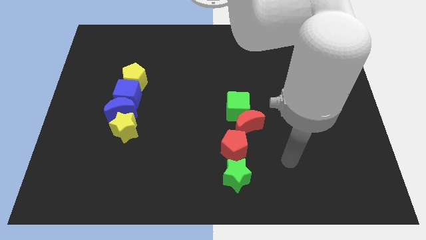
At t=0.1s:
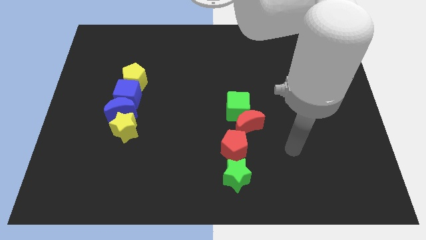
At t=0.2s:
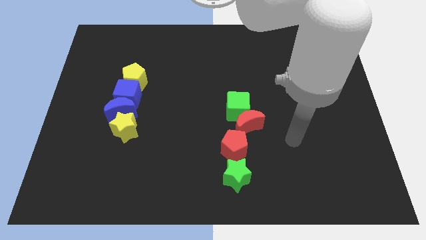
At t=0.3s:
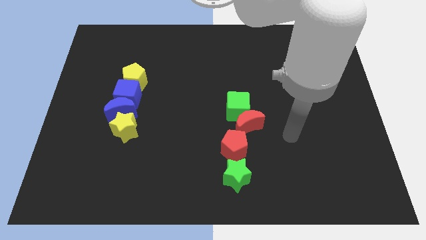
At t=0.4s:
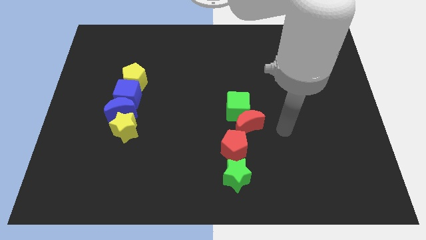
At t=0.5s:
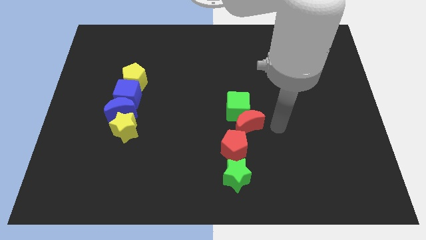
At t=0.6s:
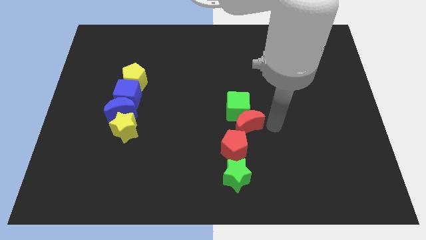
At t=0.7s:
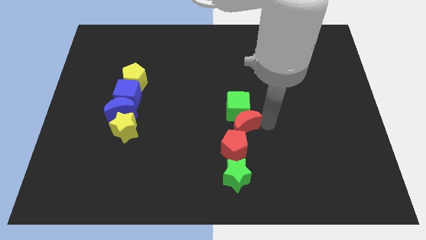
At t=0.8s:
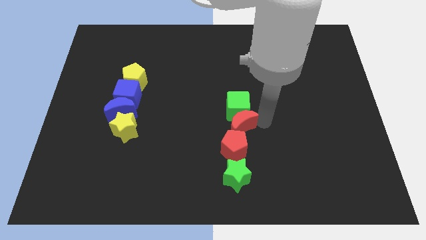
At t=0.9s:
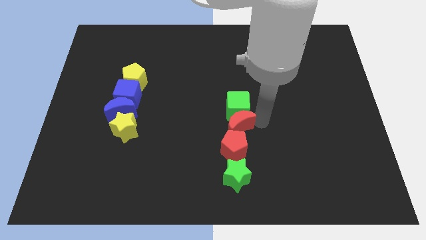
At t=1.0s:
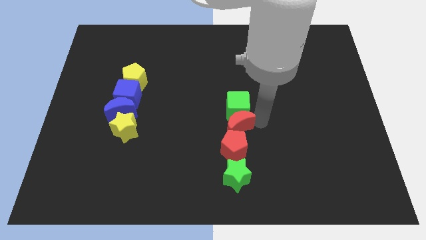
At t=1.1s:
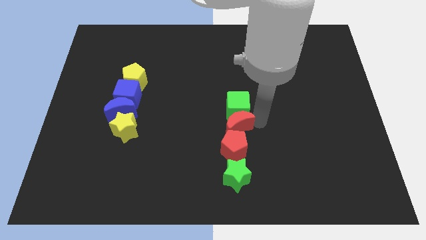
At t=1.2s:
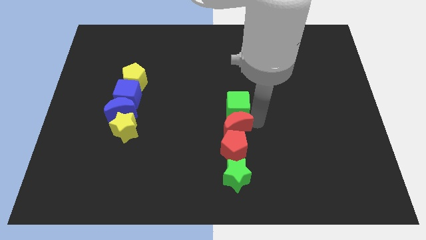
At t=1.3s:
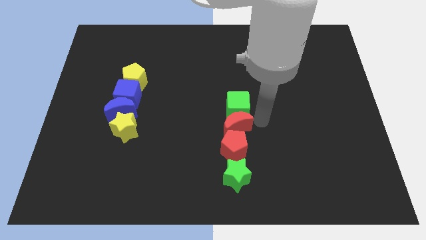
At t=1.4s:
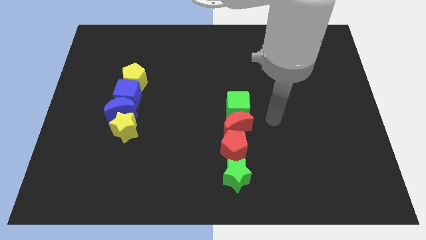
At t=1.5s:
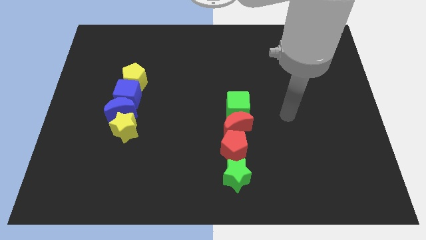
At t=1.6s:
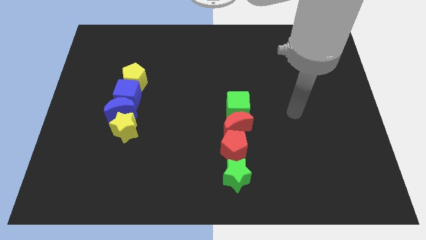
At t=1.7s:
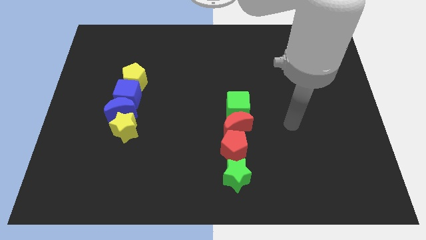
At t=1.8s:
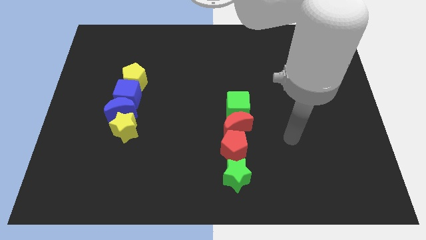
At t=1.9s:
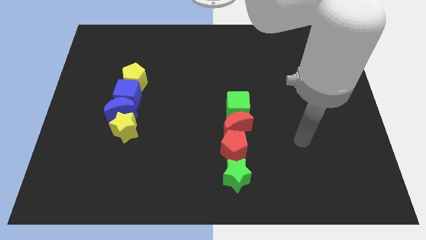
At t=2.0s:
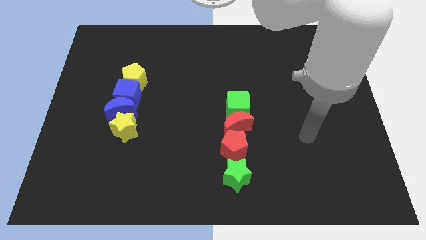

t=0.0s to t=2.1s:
place the red moon in between the red pentagon and green cube

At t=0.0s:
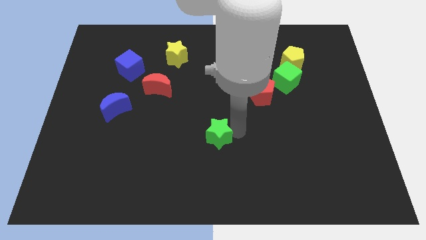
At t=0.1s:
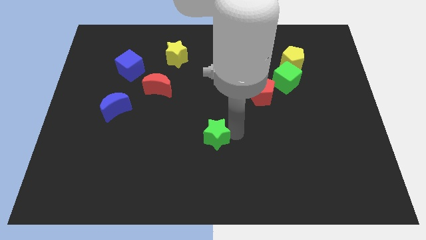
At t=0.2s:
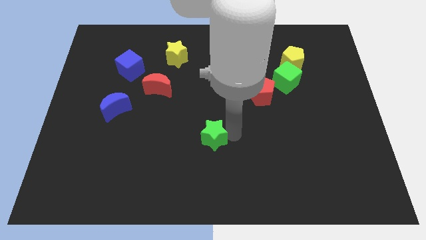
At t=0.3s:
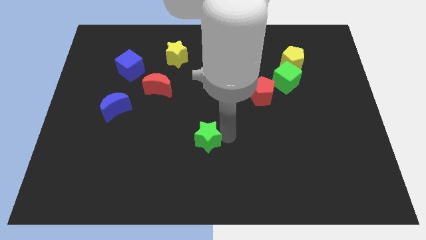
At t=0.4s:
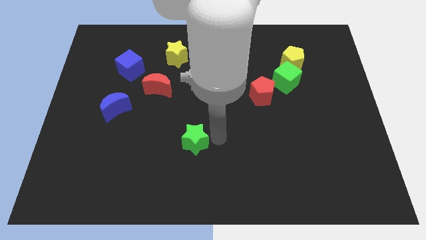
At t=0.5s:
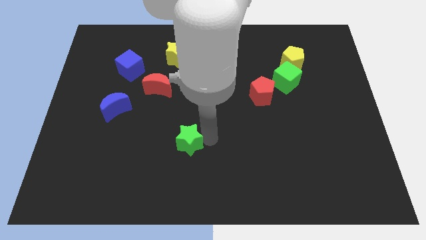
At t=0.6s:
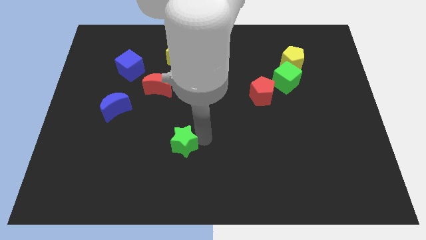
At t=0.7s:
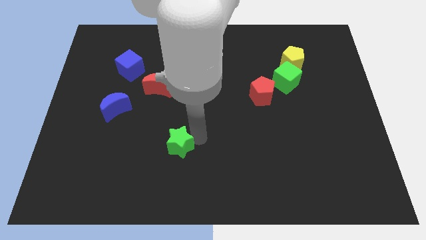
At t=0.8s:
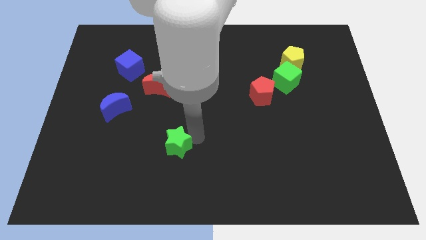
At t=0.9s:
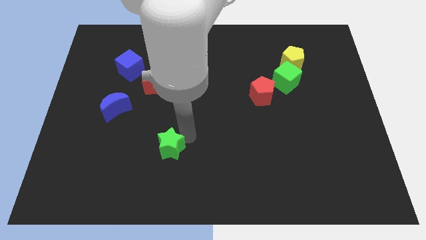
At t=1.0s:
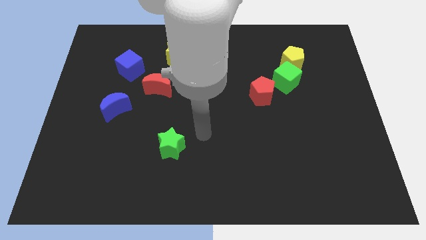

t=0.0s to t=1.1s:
slide green star to the left slightly

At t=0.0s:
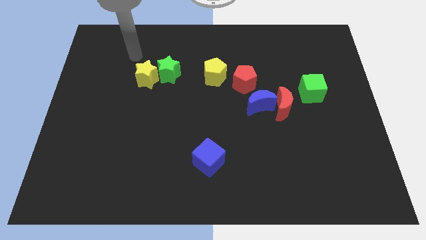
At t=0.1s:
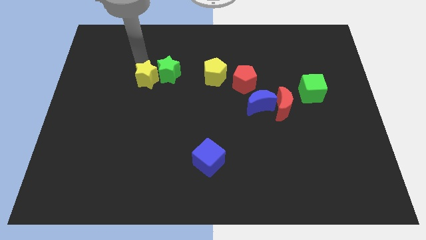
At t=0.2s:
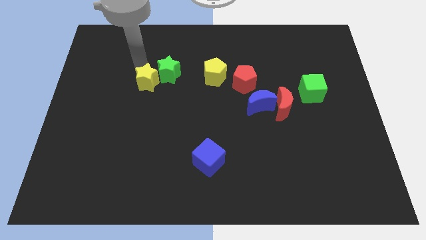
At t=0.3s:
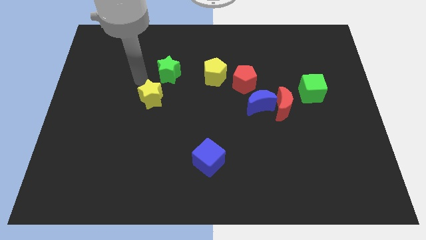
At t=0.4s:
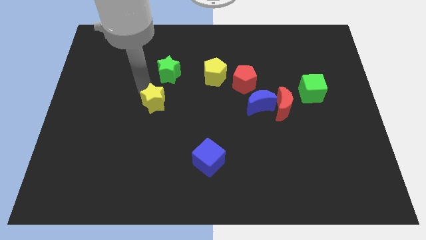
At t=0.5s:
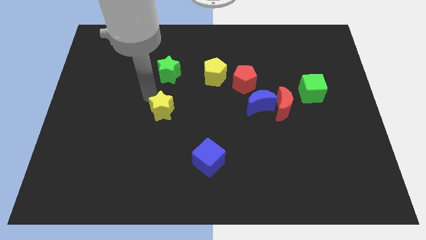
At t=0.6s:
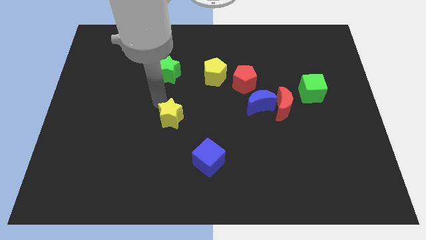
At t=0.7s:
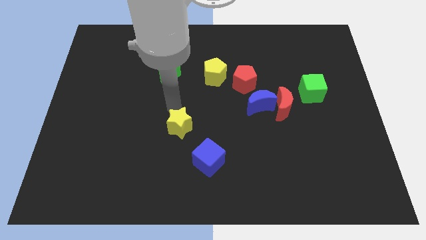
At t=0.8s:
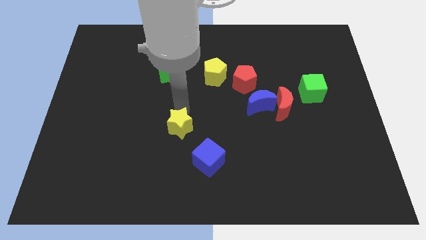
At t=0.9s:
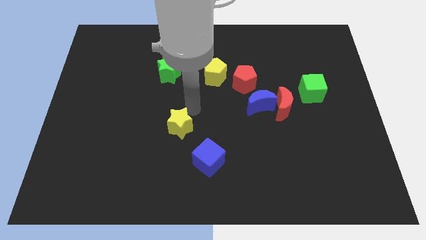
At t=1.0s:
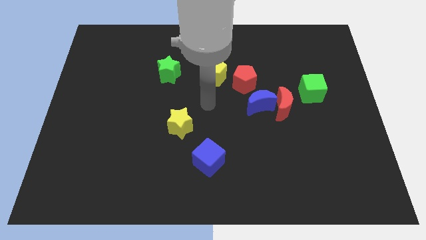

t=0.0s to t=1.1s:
move the yellow star vertically to the top of the green star

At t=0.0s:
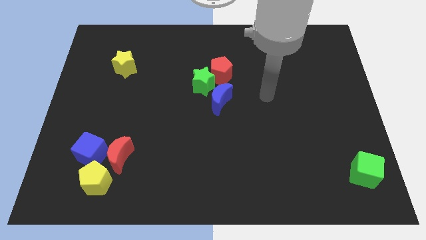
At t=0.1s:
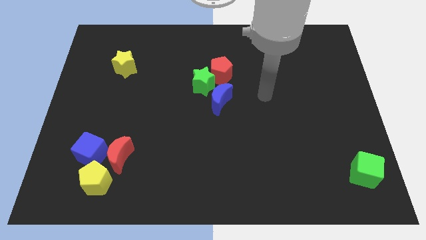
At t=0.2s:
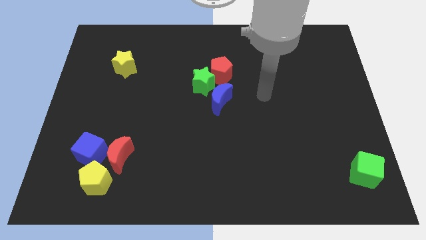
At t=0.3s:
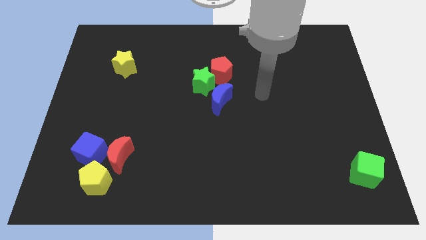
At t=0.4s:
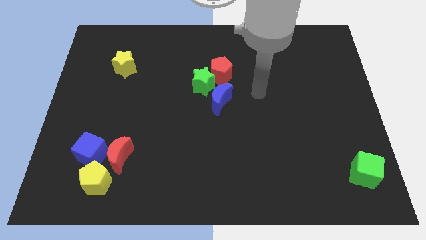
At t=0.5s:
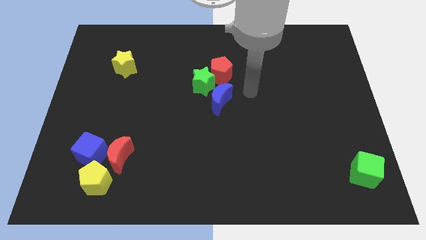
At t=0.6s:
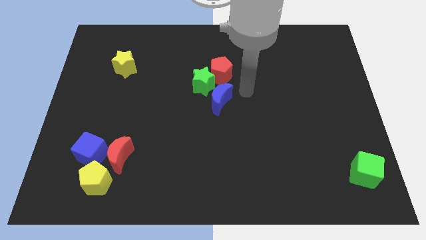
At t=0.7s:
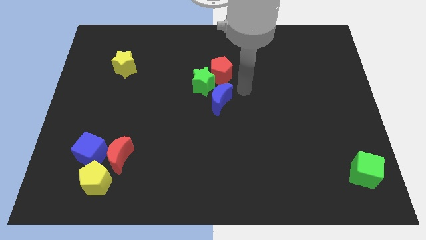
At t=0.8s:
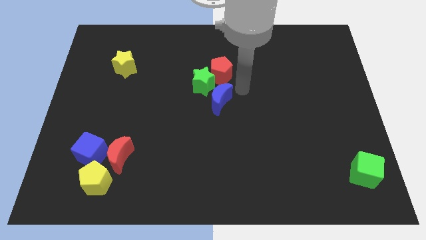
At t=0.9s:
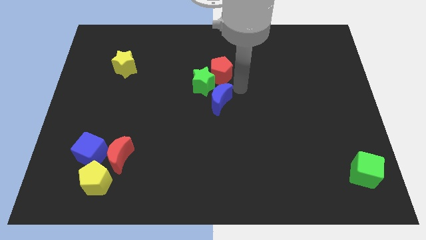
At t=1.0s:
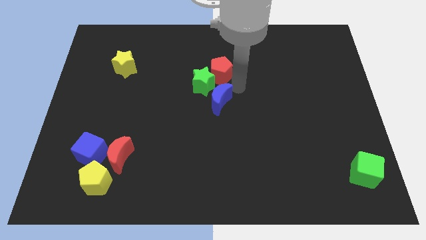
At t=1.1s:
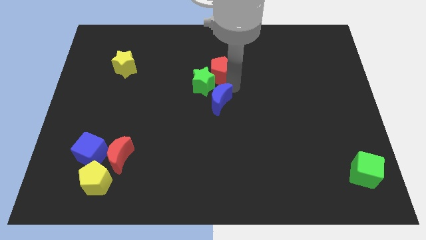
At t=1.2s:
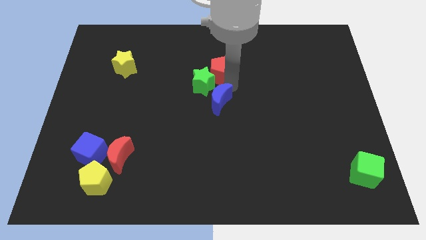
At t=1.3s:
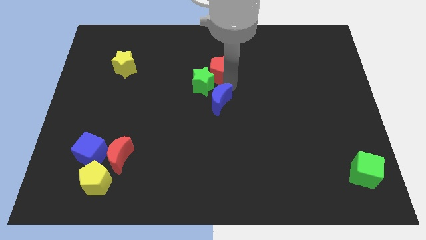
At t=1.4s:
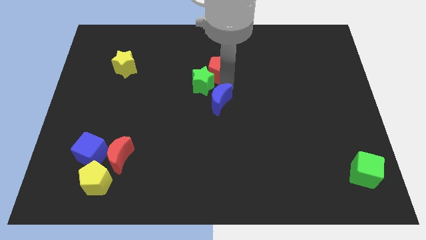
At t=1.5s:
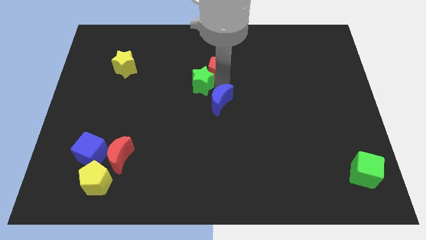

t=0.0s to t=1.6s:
touch the bottom of red pentagon

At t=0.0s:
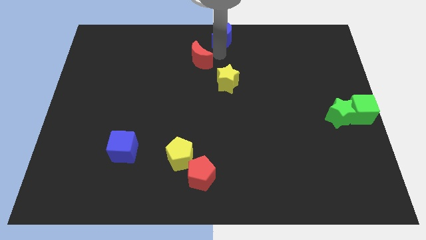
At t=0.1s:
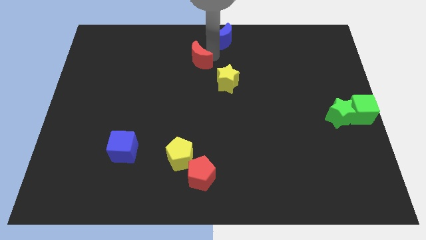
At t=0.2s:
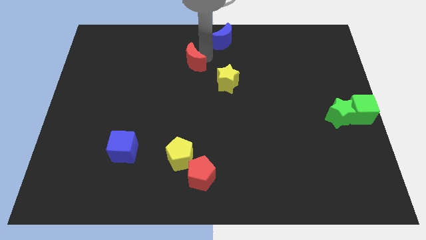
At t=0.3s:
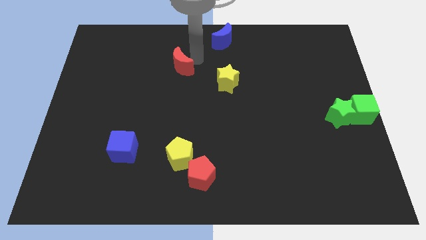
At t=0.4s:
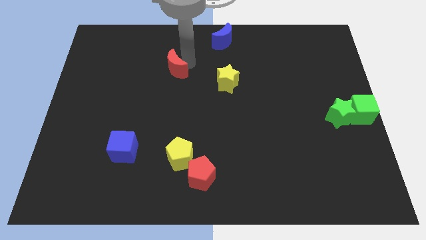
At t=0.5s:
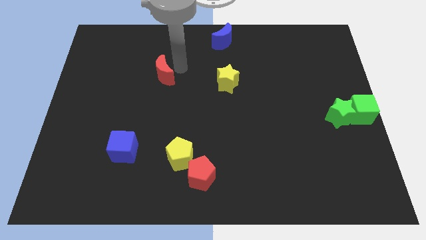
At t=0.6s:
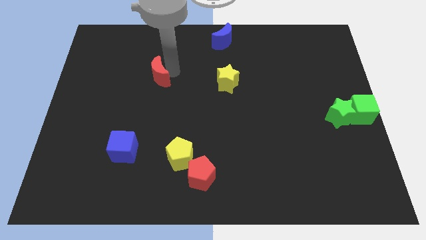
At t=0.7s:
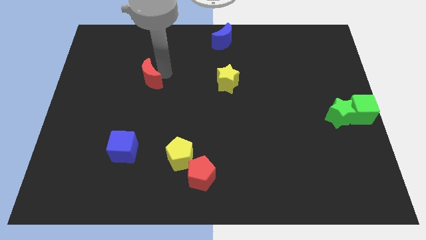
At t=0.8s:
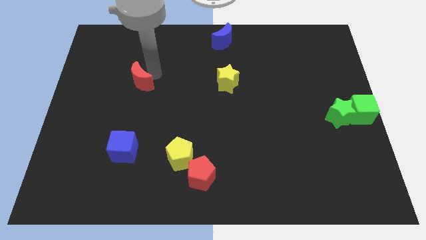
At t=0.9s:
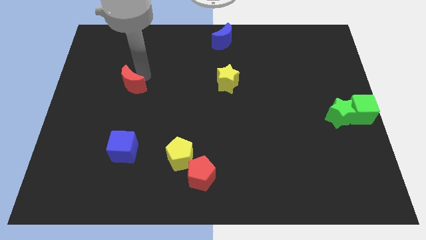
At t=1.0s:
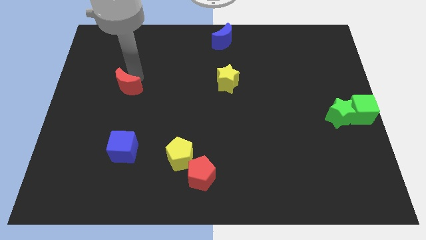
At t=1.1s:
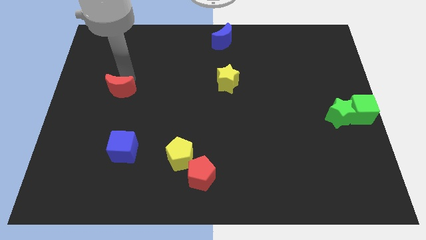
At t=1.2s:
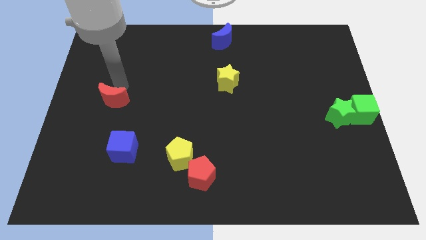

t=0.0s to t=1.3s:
move the red crescent away from the blue crescent

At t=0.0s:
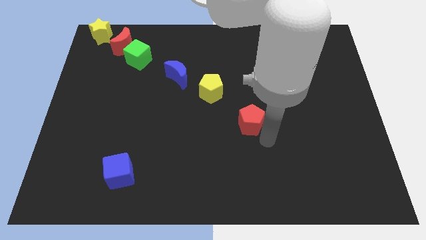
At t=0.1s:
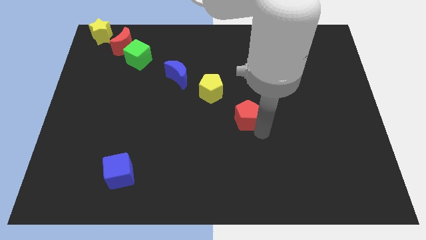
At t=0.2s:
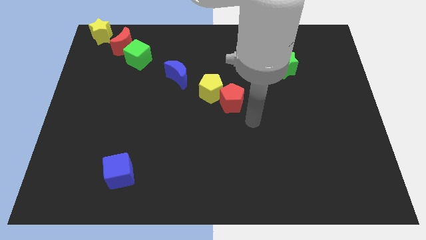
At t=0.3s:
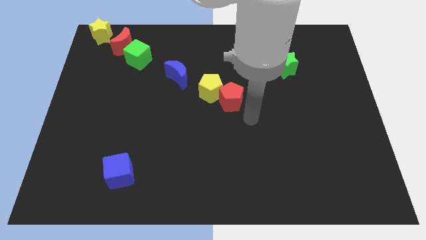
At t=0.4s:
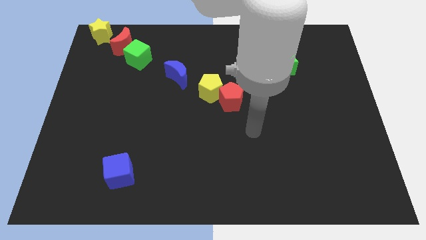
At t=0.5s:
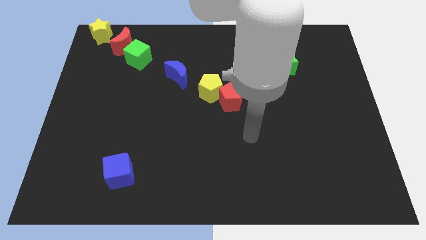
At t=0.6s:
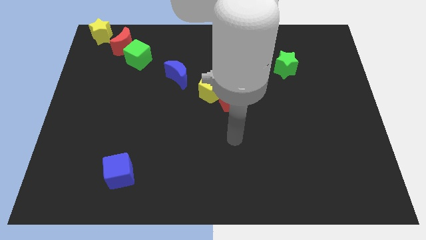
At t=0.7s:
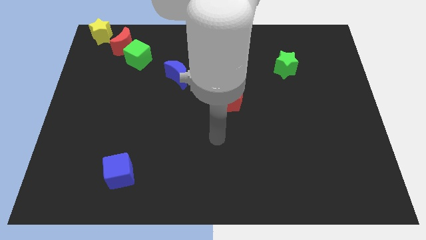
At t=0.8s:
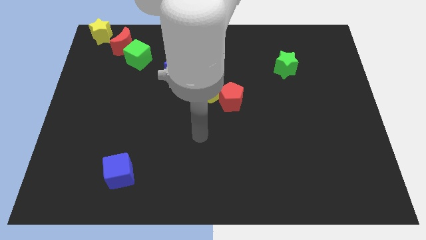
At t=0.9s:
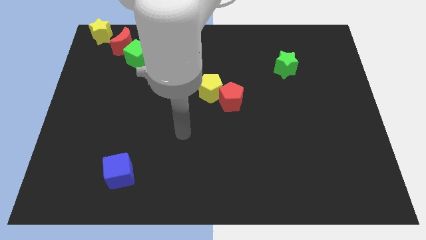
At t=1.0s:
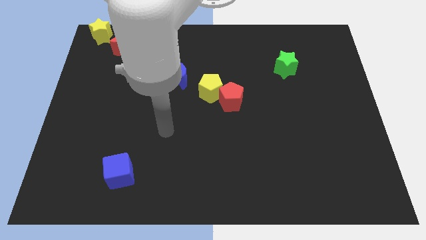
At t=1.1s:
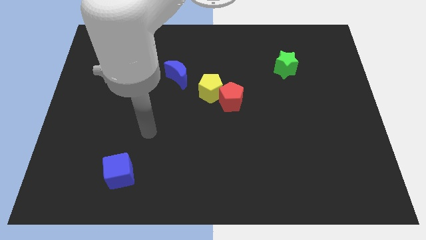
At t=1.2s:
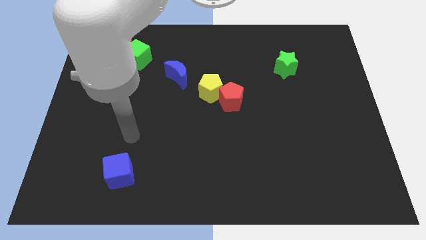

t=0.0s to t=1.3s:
push the red pentagon into the yellow pentagon

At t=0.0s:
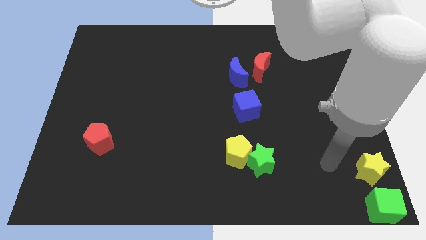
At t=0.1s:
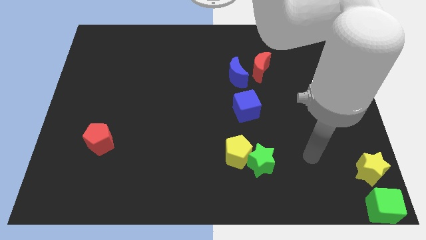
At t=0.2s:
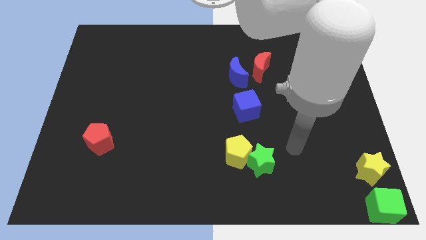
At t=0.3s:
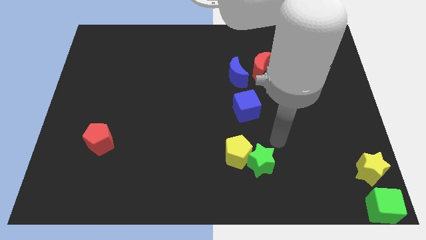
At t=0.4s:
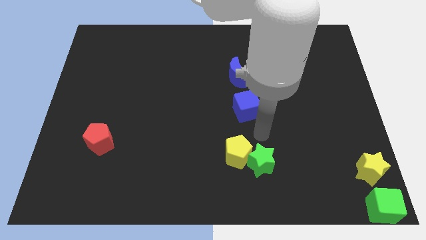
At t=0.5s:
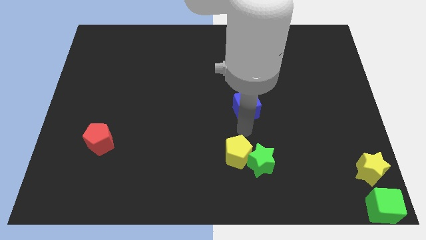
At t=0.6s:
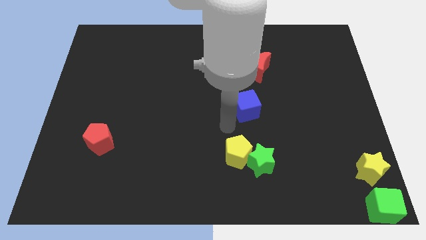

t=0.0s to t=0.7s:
point your arm in between the yellow pentagon and blue cube
